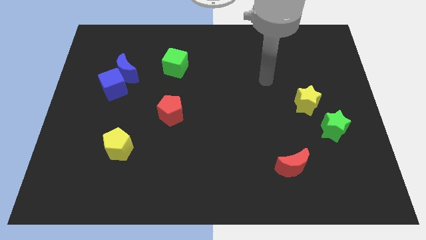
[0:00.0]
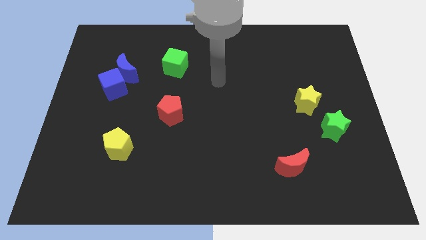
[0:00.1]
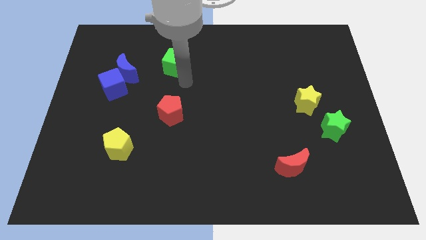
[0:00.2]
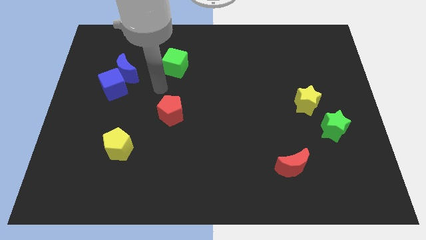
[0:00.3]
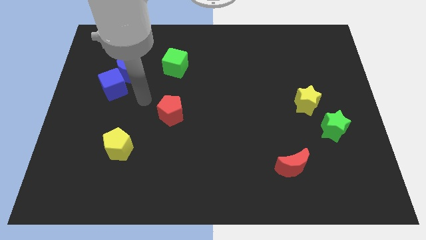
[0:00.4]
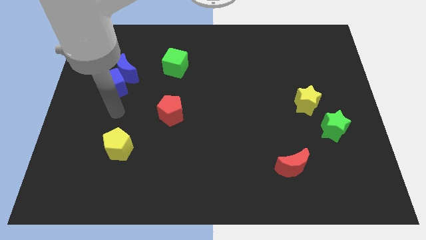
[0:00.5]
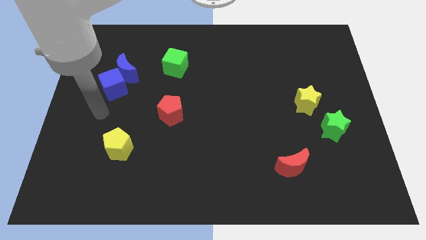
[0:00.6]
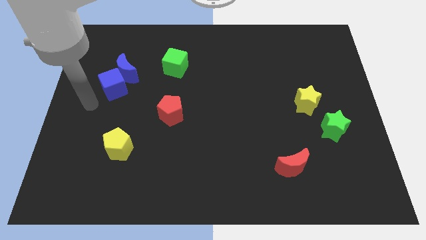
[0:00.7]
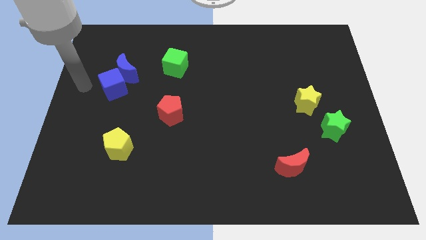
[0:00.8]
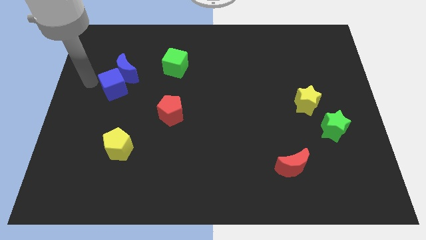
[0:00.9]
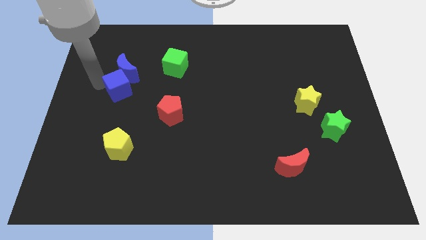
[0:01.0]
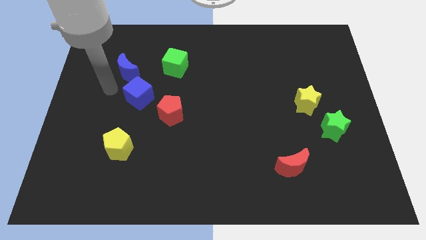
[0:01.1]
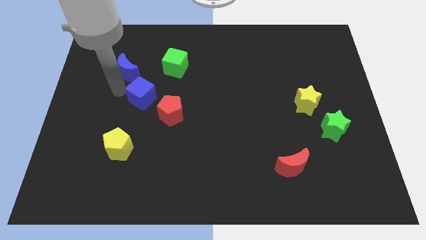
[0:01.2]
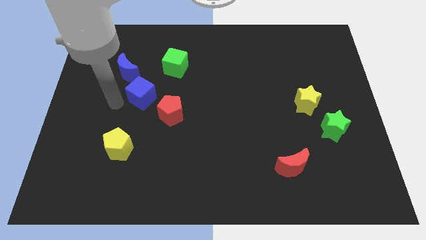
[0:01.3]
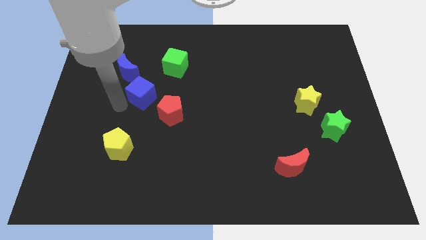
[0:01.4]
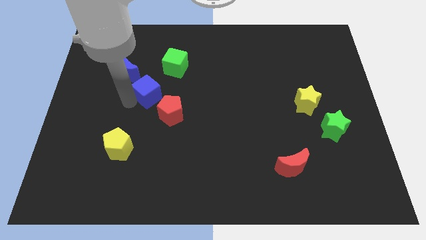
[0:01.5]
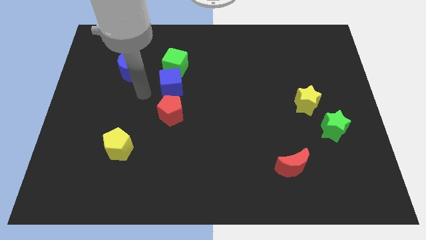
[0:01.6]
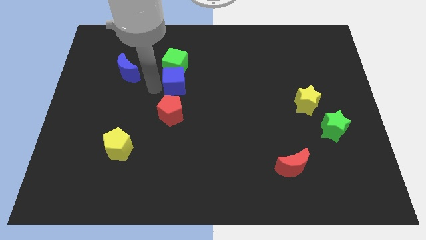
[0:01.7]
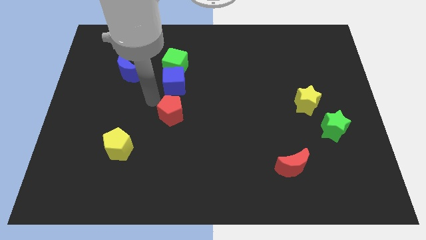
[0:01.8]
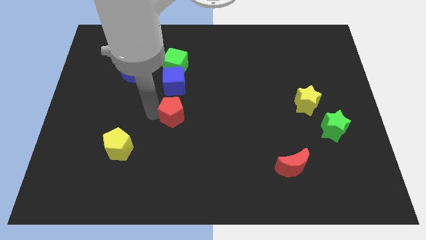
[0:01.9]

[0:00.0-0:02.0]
put the blue cube to the green cube

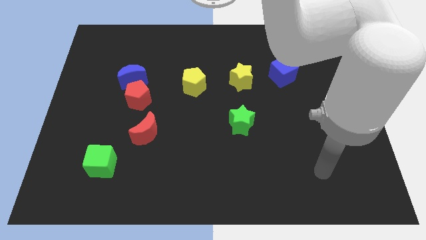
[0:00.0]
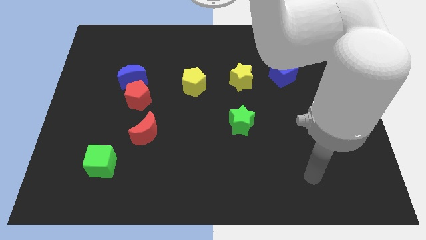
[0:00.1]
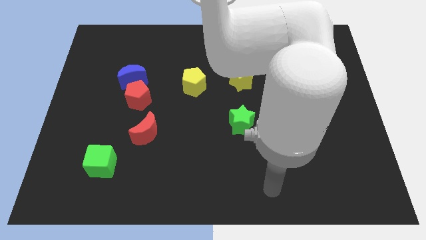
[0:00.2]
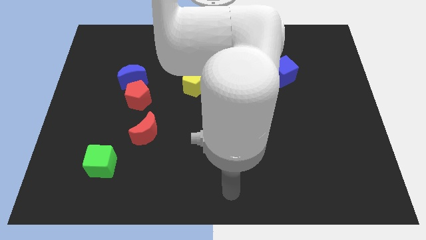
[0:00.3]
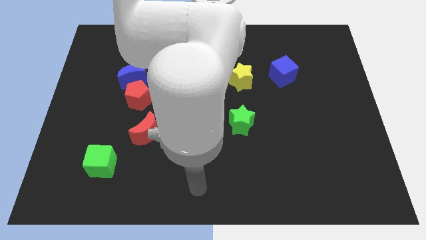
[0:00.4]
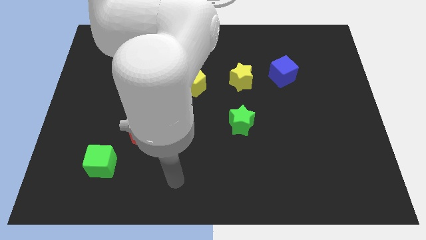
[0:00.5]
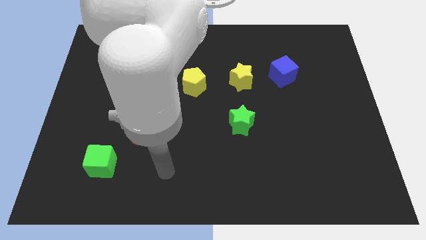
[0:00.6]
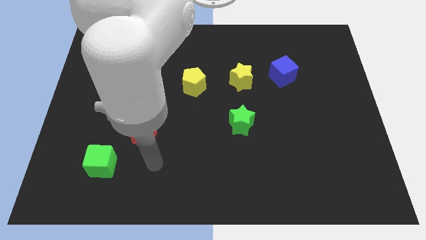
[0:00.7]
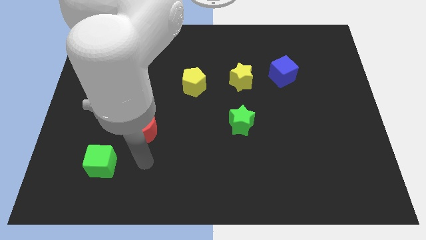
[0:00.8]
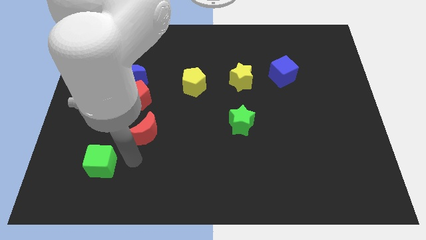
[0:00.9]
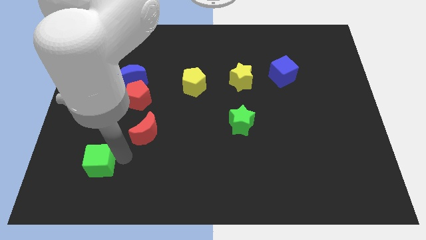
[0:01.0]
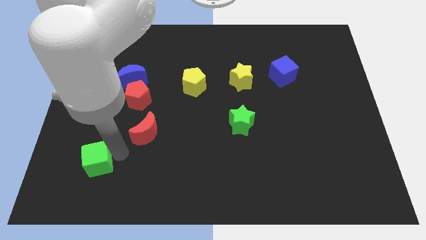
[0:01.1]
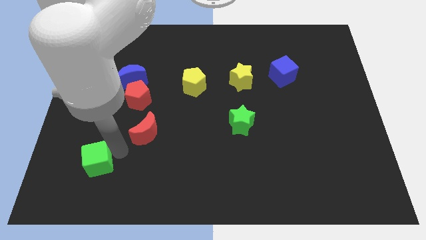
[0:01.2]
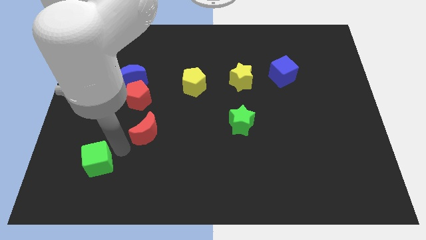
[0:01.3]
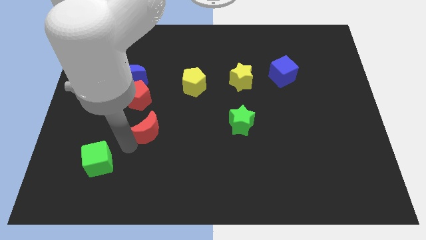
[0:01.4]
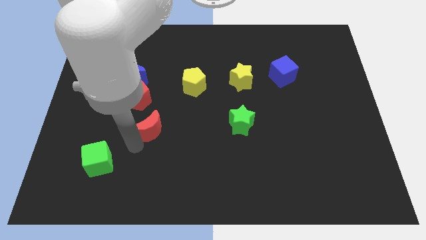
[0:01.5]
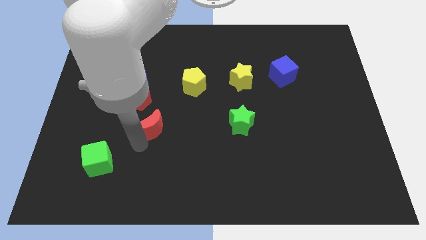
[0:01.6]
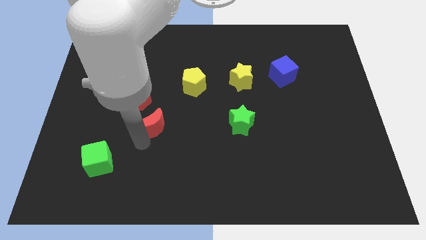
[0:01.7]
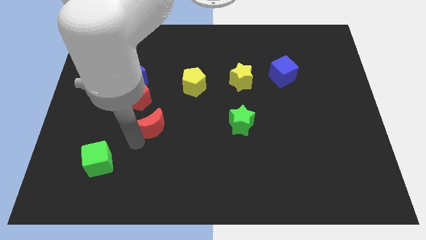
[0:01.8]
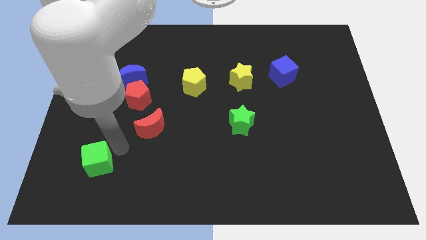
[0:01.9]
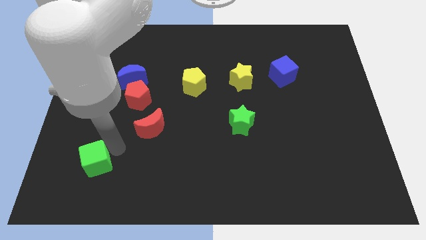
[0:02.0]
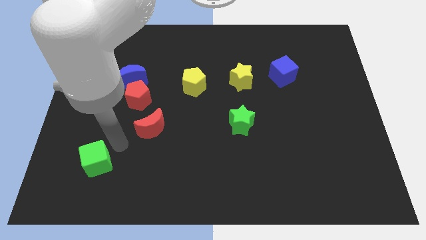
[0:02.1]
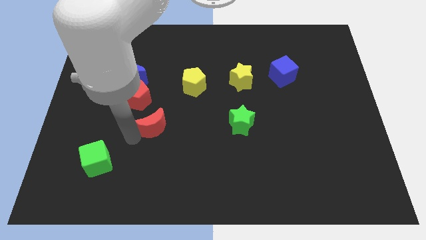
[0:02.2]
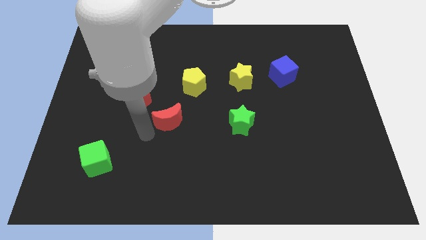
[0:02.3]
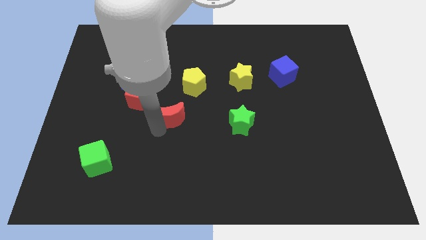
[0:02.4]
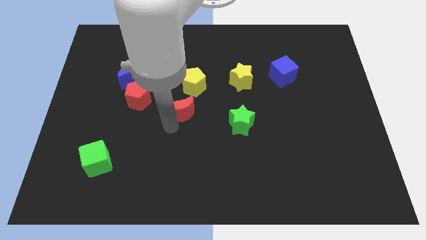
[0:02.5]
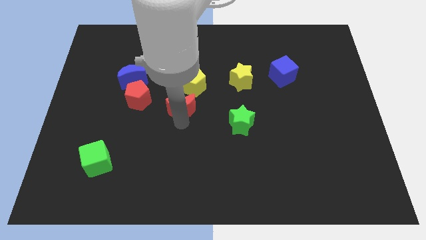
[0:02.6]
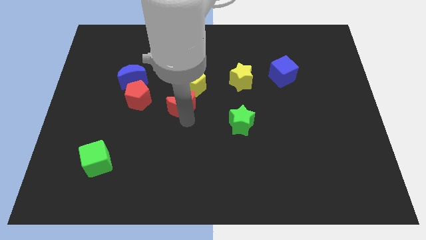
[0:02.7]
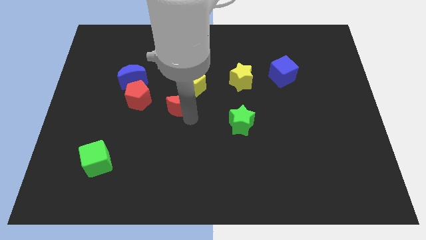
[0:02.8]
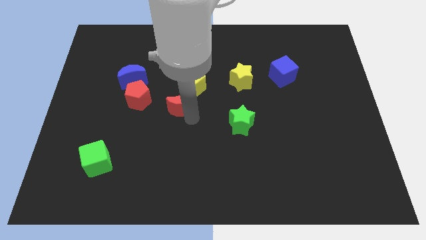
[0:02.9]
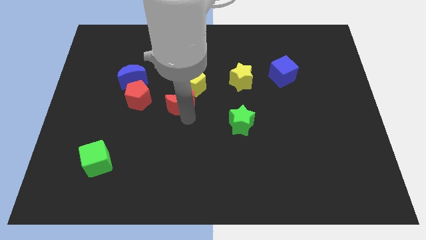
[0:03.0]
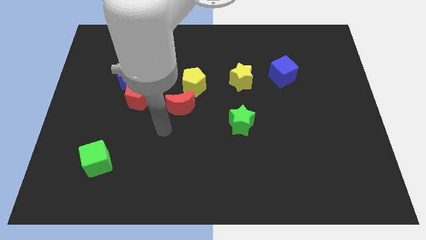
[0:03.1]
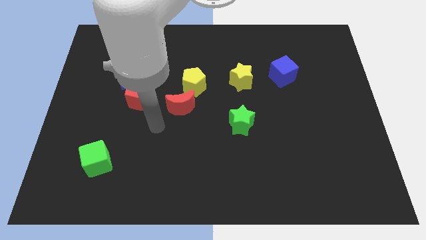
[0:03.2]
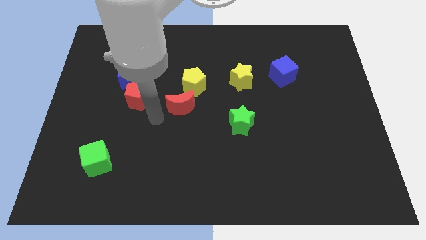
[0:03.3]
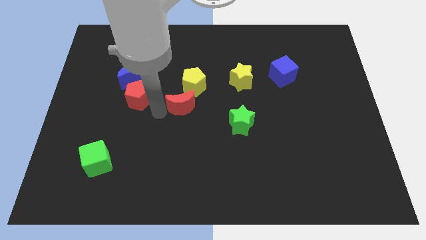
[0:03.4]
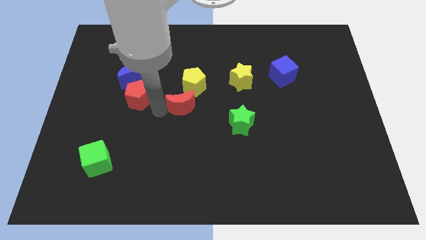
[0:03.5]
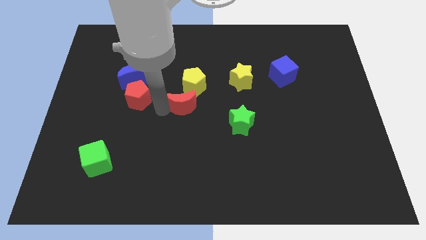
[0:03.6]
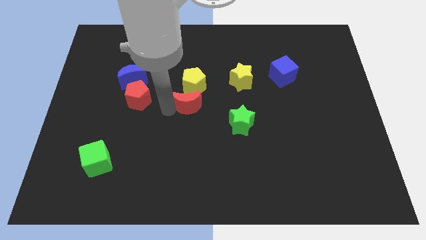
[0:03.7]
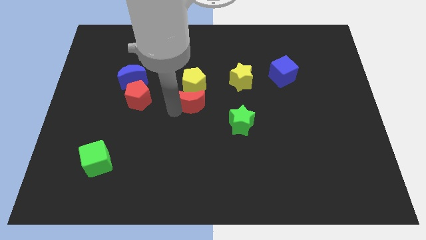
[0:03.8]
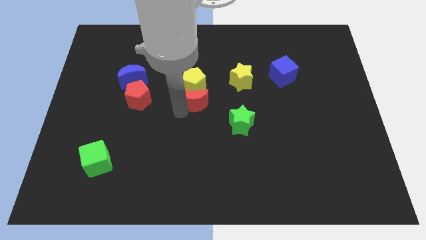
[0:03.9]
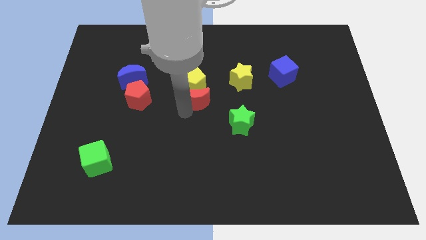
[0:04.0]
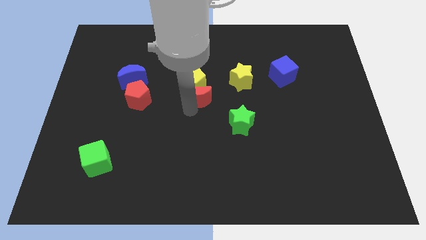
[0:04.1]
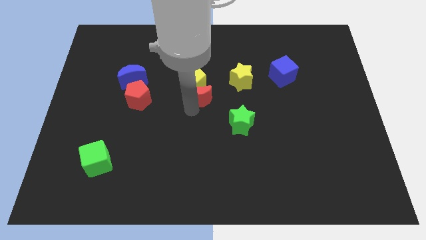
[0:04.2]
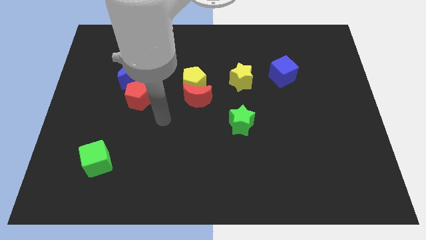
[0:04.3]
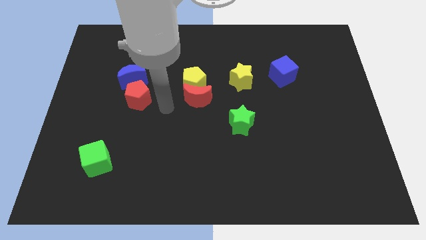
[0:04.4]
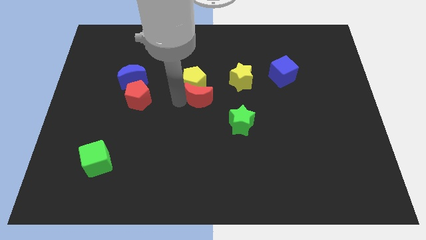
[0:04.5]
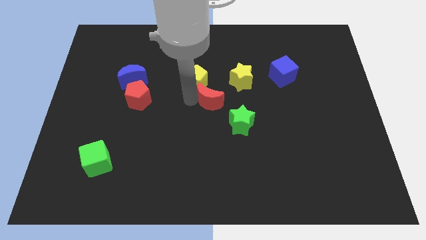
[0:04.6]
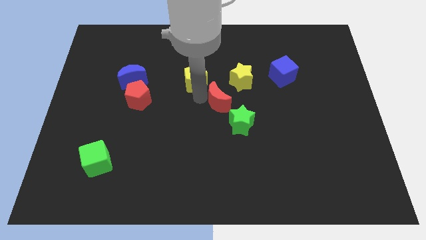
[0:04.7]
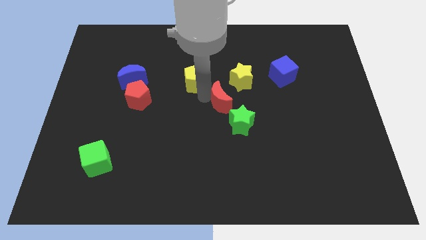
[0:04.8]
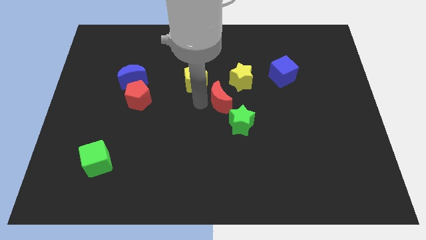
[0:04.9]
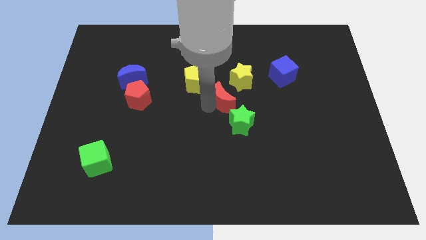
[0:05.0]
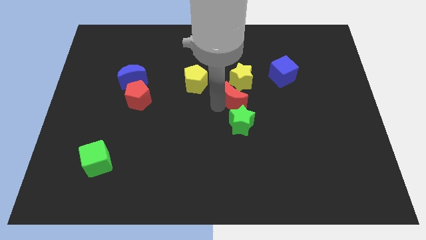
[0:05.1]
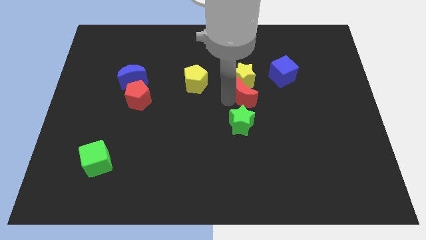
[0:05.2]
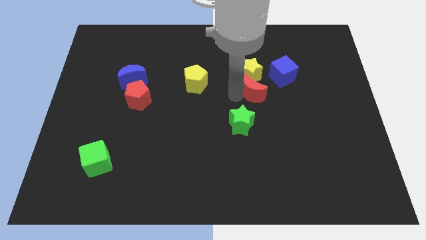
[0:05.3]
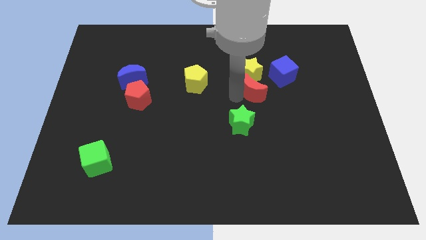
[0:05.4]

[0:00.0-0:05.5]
move the red moon close to the yellow star

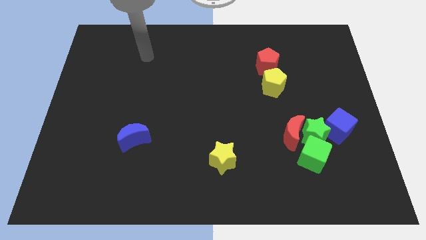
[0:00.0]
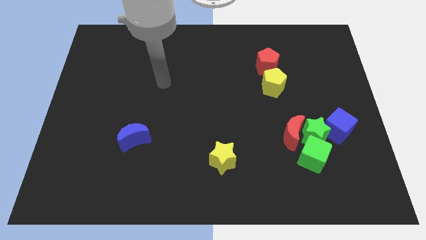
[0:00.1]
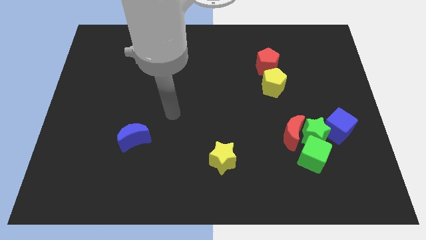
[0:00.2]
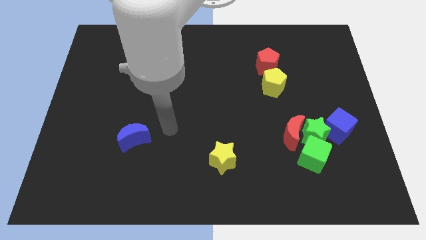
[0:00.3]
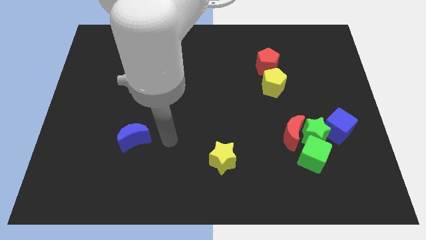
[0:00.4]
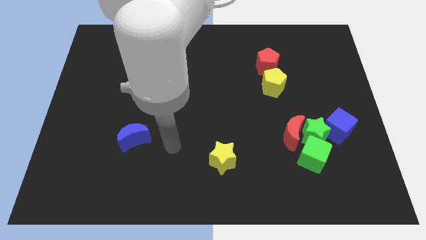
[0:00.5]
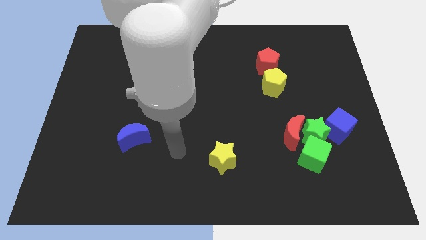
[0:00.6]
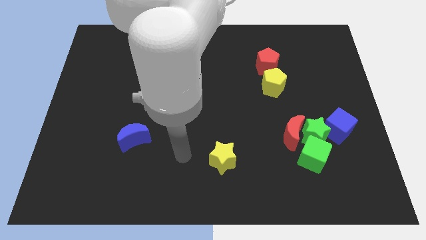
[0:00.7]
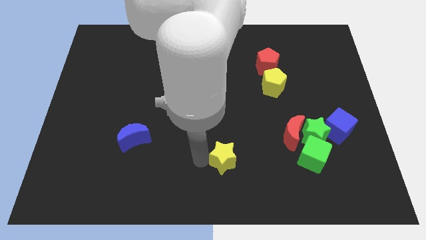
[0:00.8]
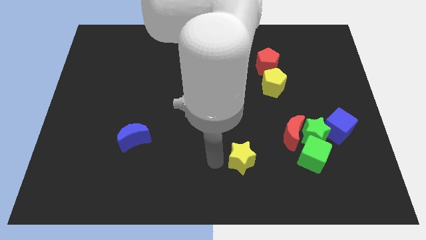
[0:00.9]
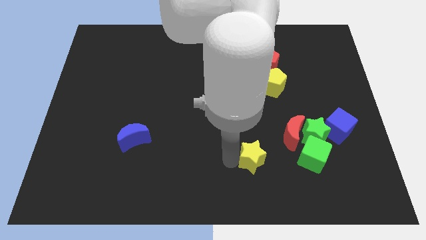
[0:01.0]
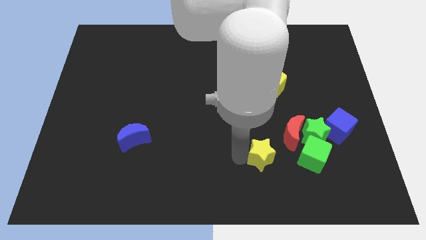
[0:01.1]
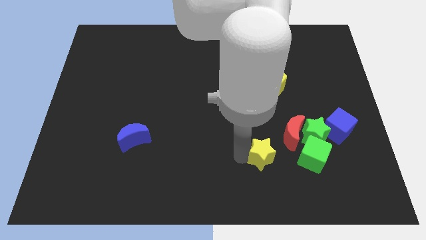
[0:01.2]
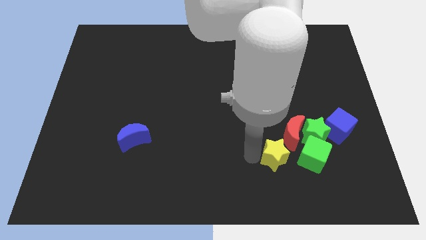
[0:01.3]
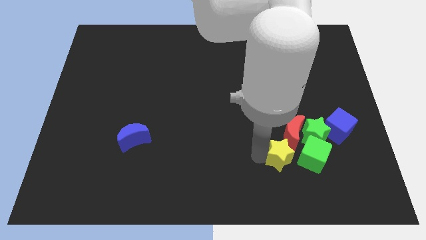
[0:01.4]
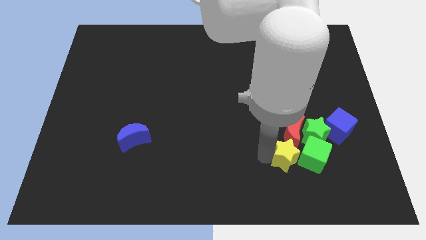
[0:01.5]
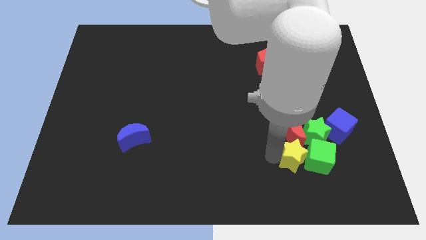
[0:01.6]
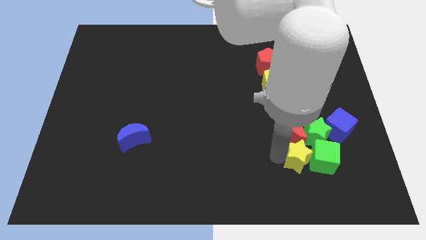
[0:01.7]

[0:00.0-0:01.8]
move the yellow star towards the green cube
